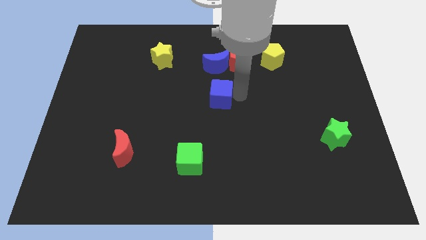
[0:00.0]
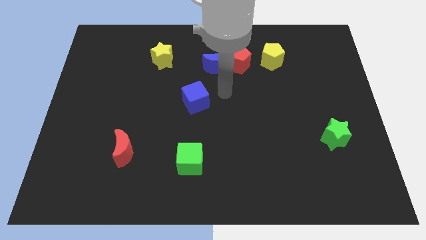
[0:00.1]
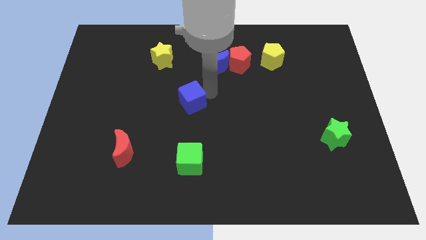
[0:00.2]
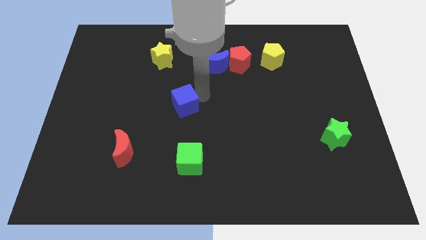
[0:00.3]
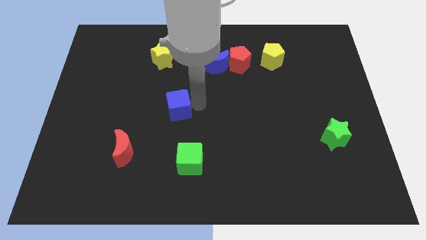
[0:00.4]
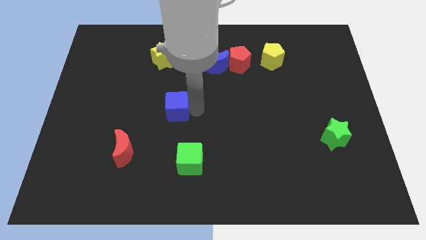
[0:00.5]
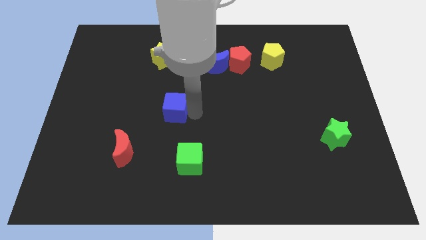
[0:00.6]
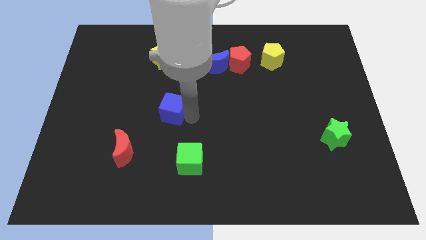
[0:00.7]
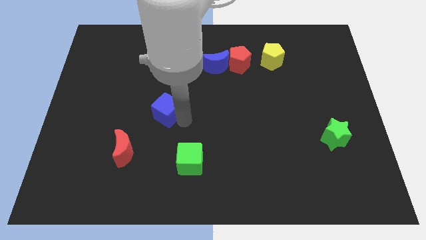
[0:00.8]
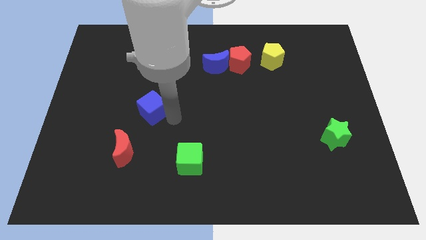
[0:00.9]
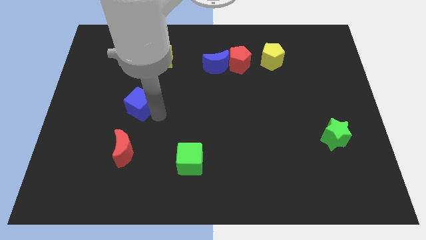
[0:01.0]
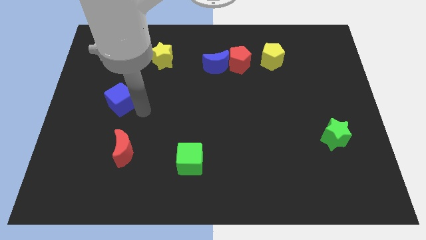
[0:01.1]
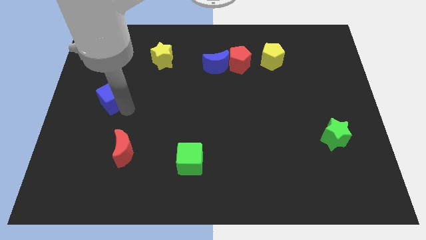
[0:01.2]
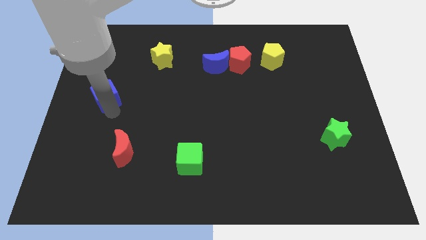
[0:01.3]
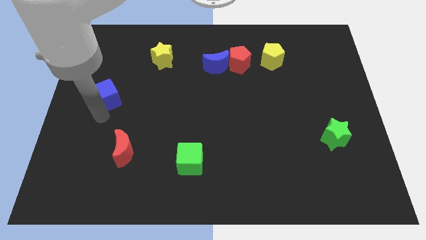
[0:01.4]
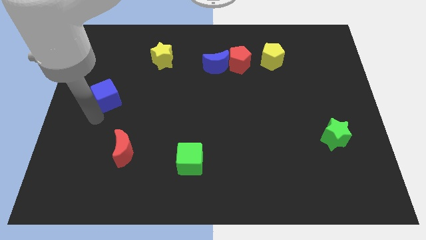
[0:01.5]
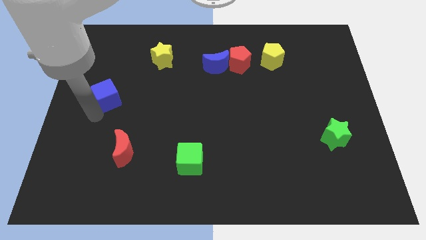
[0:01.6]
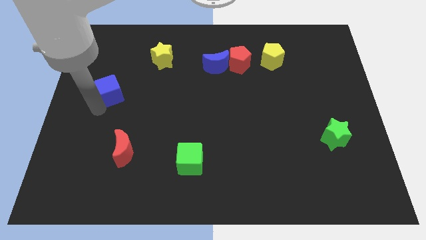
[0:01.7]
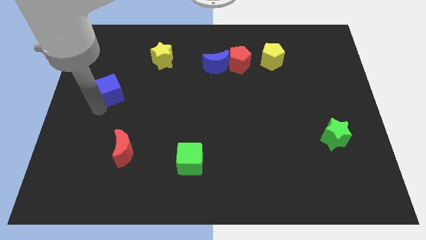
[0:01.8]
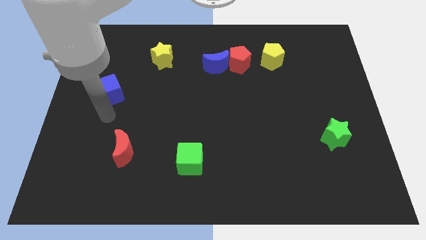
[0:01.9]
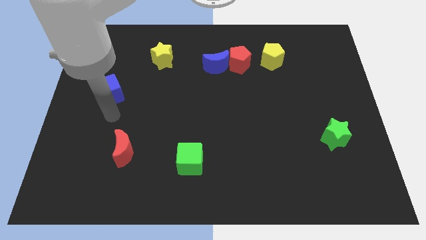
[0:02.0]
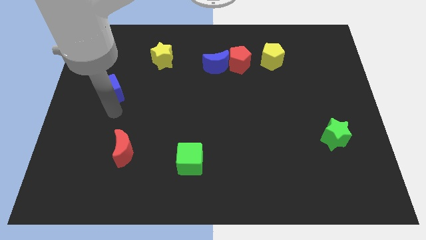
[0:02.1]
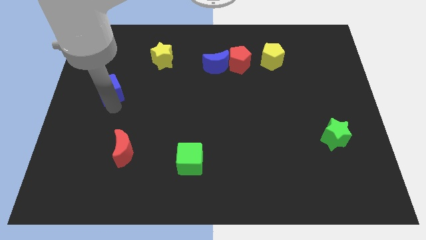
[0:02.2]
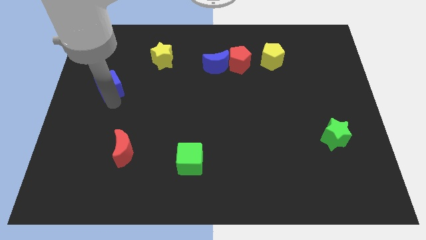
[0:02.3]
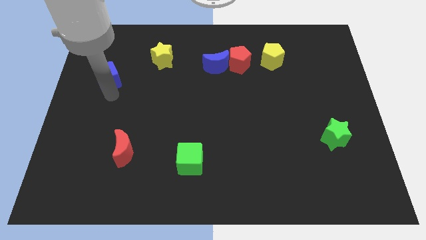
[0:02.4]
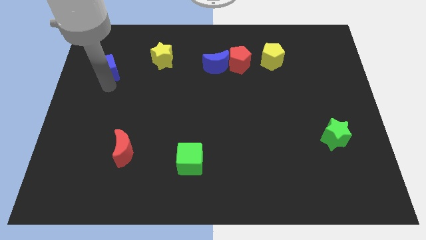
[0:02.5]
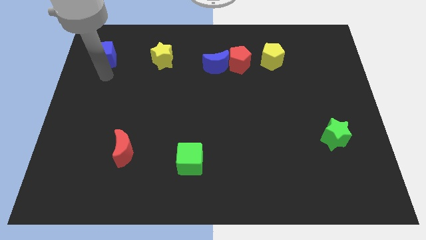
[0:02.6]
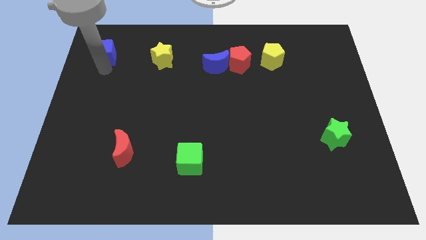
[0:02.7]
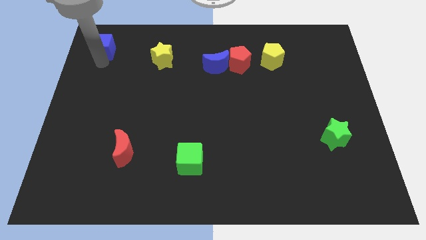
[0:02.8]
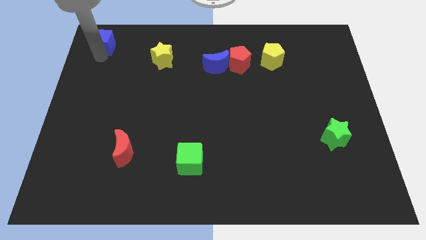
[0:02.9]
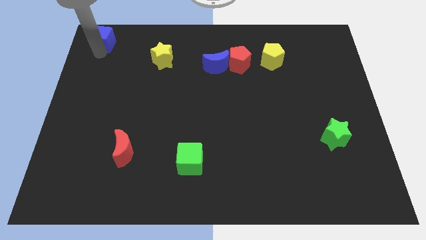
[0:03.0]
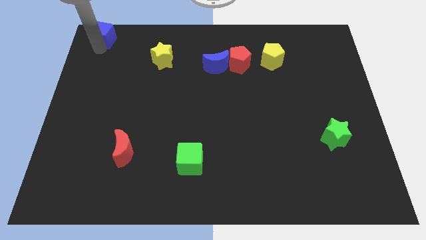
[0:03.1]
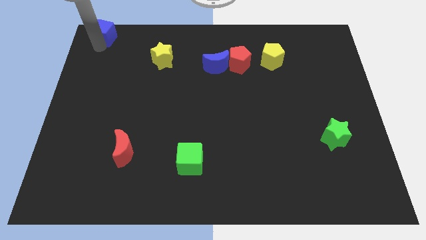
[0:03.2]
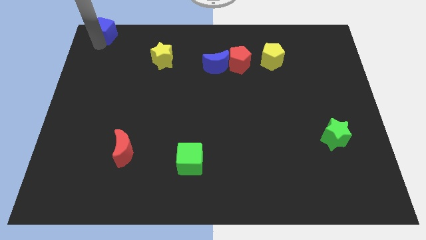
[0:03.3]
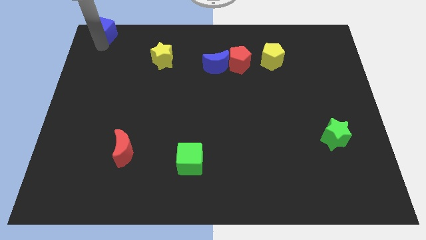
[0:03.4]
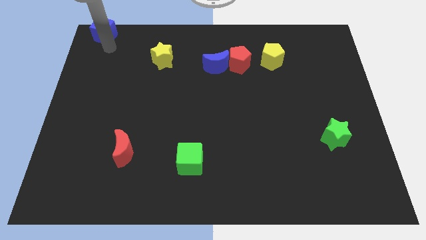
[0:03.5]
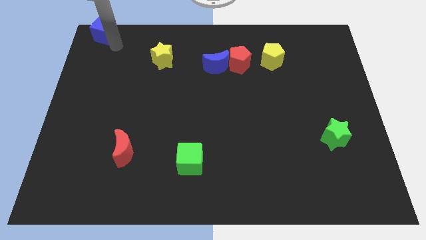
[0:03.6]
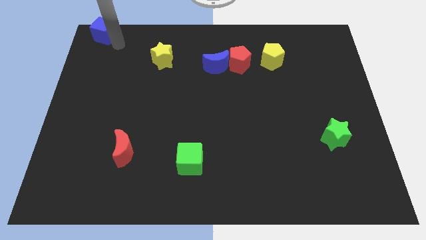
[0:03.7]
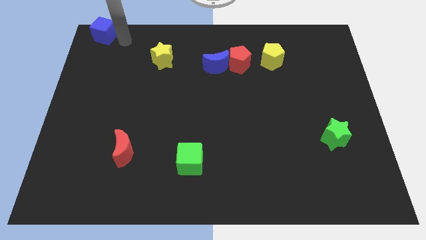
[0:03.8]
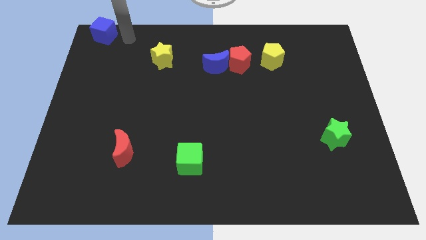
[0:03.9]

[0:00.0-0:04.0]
push blue block towards the left top center

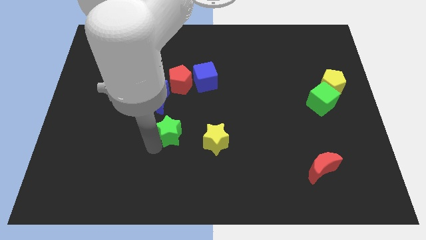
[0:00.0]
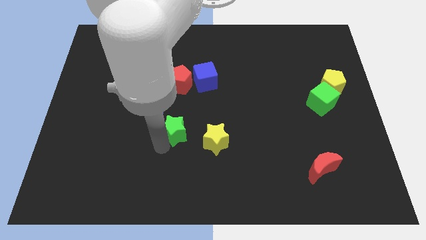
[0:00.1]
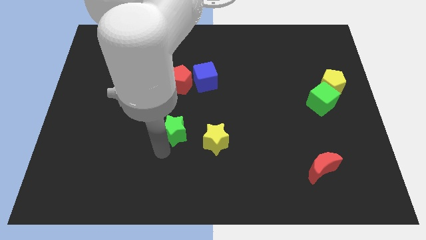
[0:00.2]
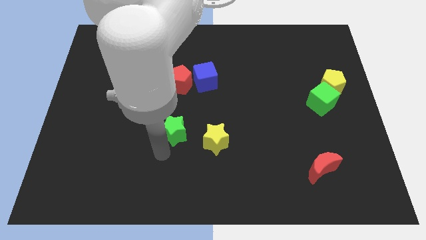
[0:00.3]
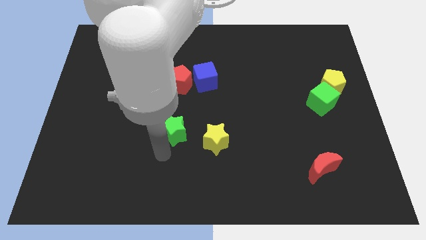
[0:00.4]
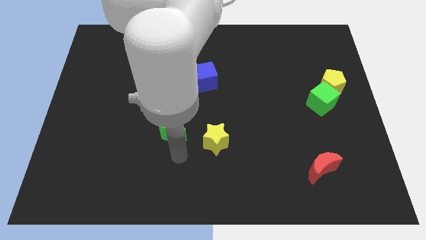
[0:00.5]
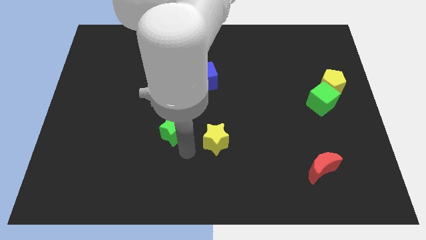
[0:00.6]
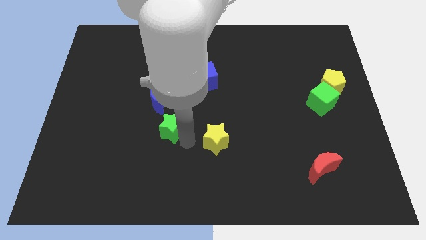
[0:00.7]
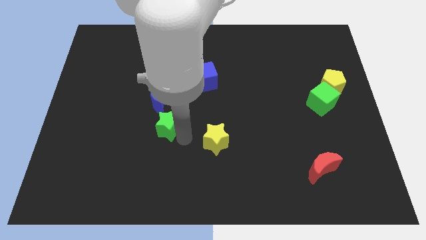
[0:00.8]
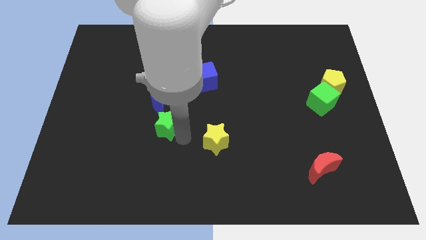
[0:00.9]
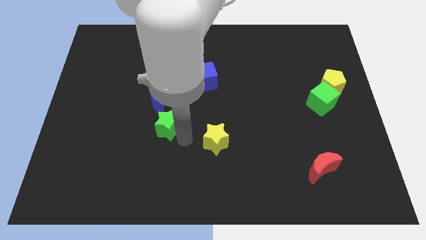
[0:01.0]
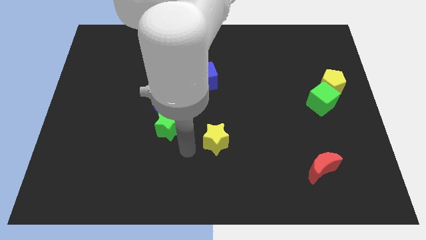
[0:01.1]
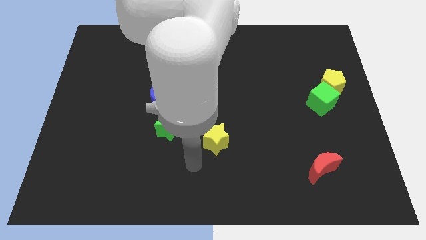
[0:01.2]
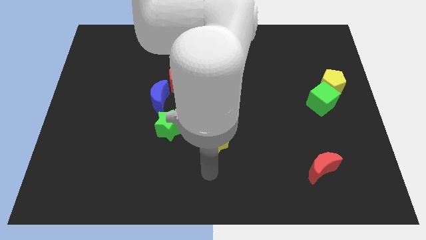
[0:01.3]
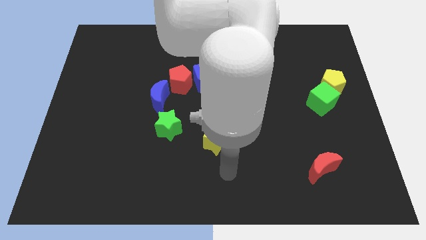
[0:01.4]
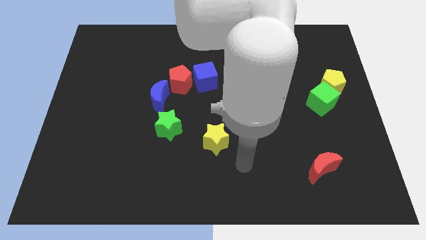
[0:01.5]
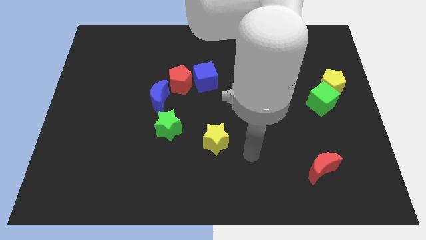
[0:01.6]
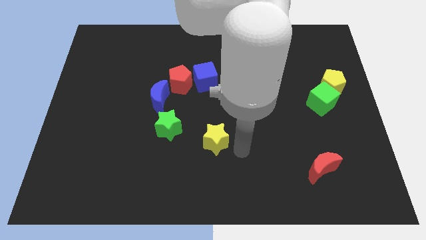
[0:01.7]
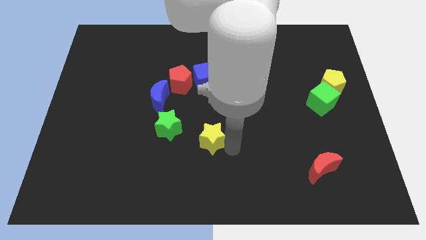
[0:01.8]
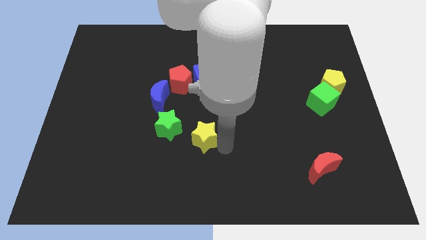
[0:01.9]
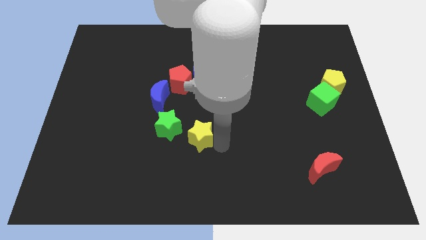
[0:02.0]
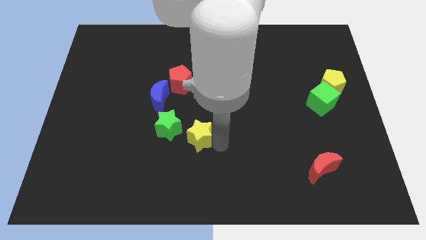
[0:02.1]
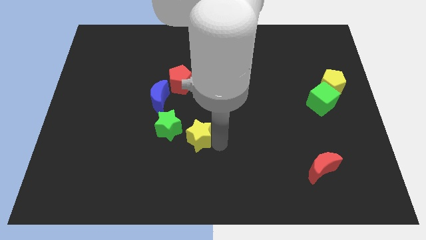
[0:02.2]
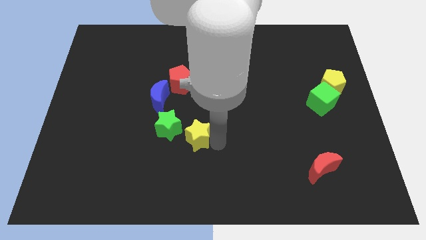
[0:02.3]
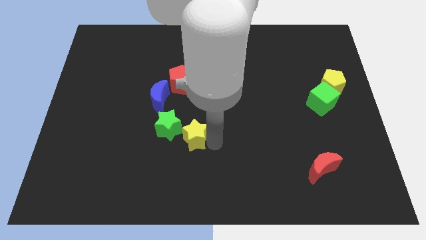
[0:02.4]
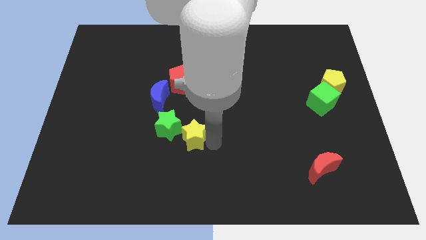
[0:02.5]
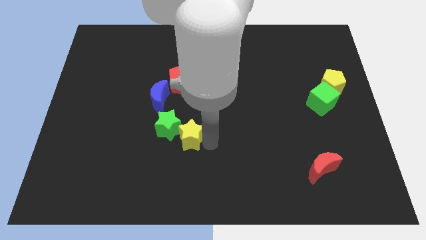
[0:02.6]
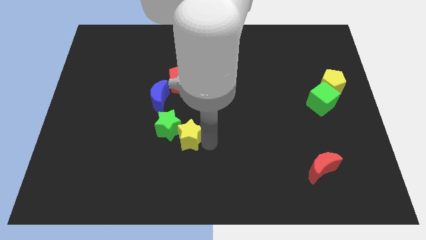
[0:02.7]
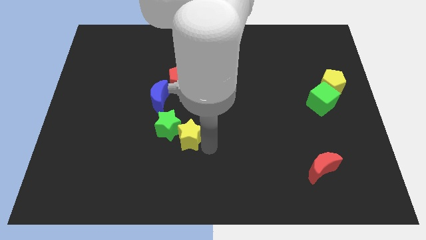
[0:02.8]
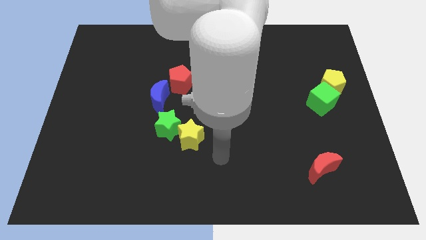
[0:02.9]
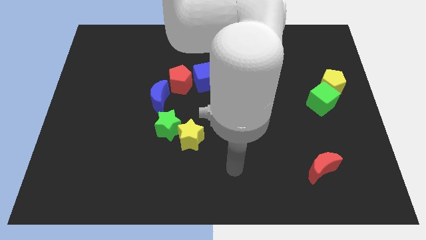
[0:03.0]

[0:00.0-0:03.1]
move the yellow star close to the right of the green star

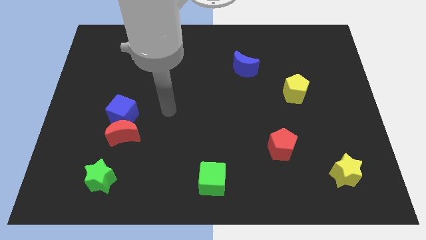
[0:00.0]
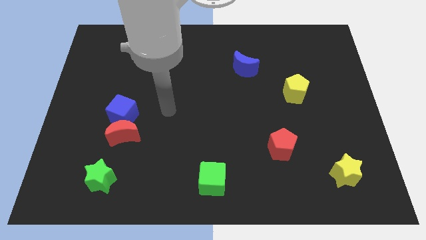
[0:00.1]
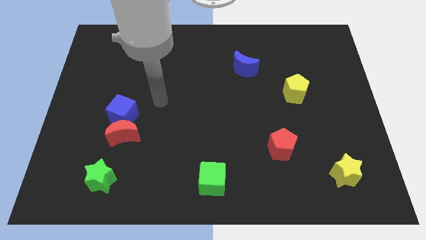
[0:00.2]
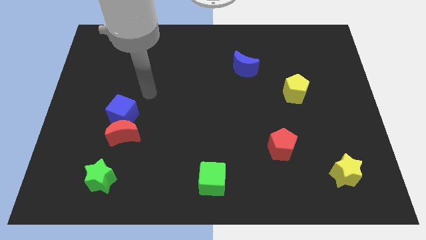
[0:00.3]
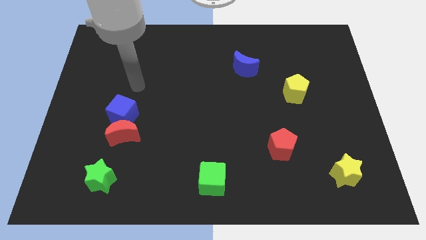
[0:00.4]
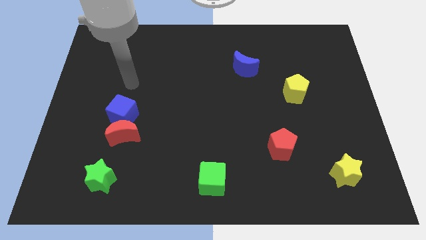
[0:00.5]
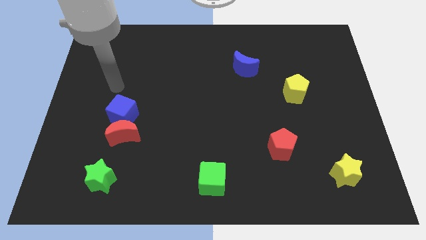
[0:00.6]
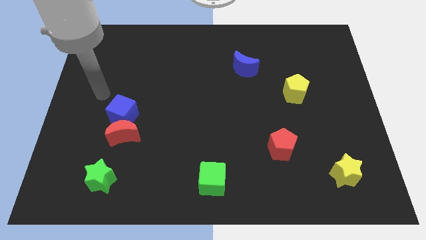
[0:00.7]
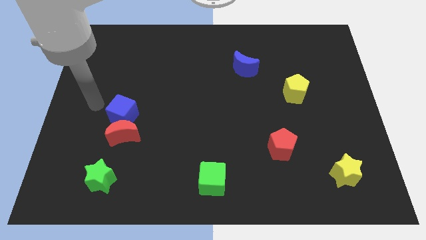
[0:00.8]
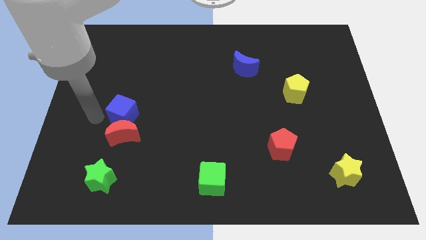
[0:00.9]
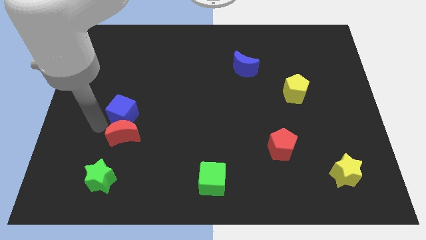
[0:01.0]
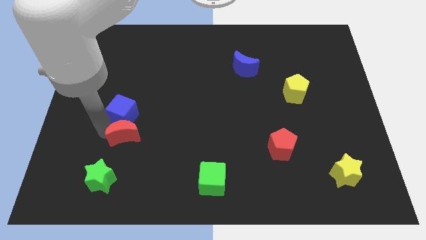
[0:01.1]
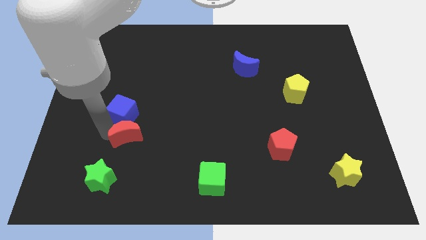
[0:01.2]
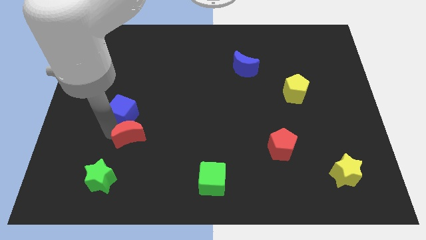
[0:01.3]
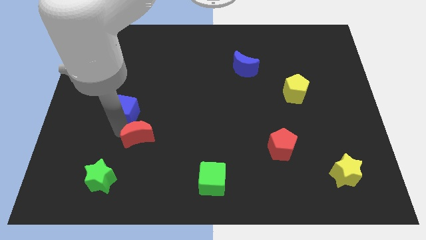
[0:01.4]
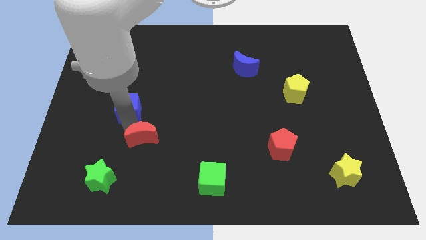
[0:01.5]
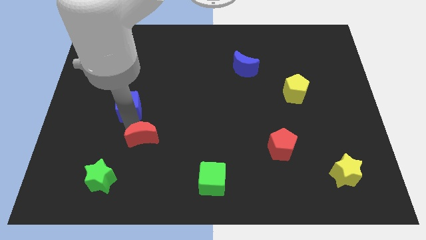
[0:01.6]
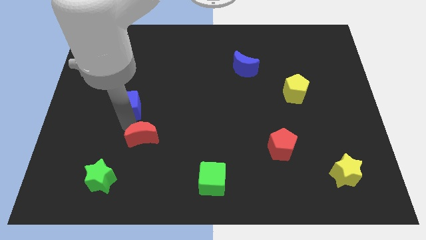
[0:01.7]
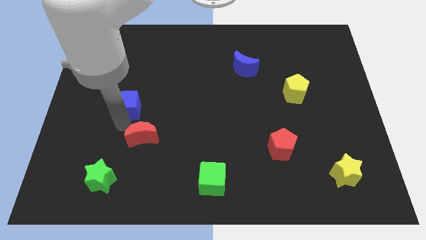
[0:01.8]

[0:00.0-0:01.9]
separate the blue cube from the red crescent
